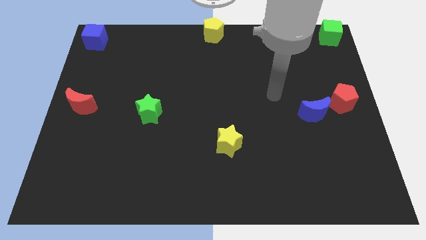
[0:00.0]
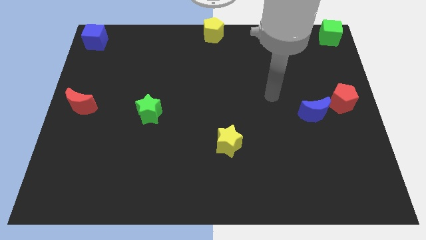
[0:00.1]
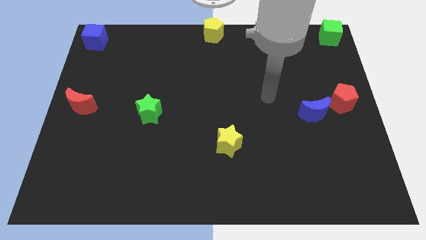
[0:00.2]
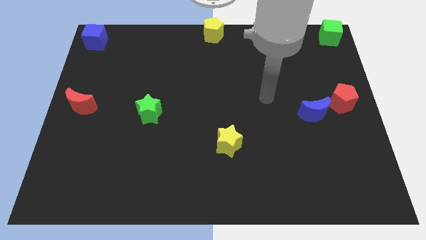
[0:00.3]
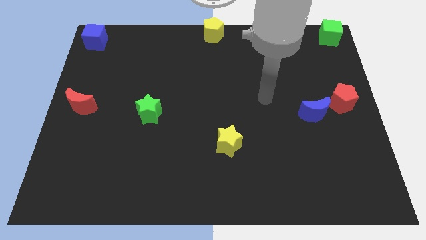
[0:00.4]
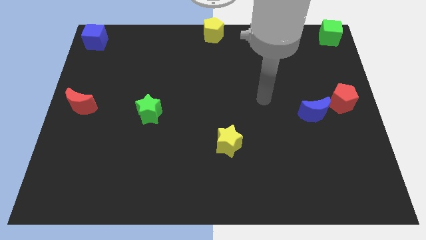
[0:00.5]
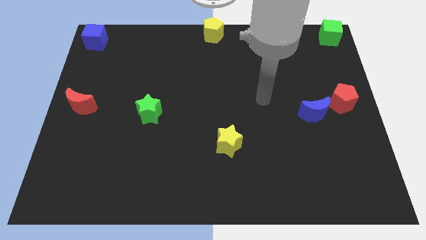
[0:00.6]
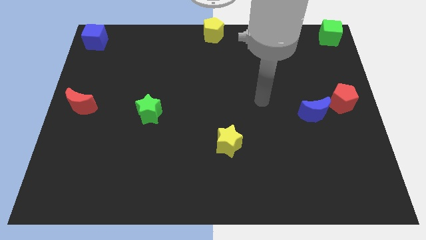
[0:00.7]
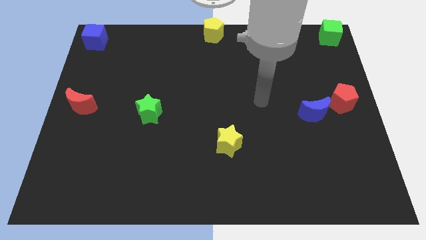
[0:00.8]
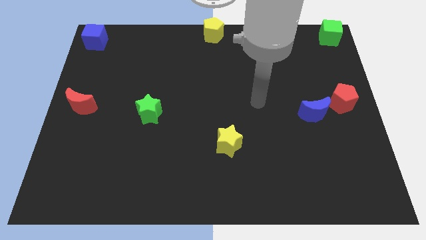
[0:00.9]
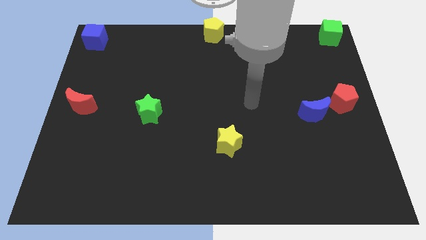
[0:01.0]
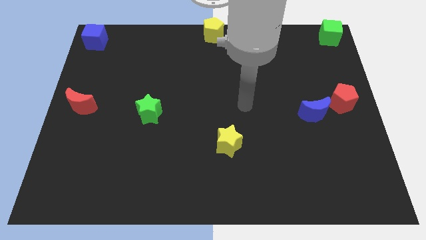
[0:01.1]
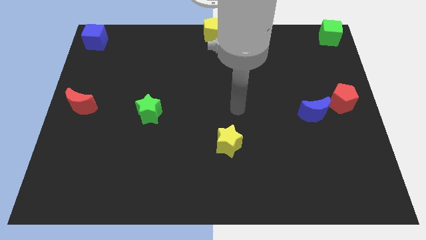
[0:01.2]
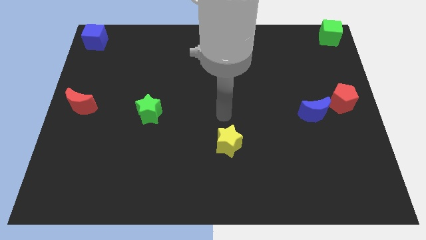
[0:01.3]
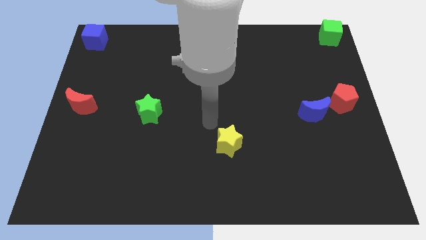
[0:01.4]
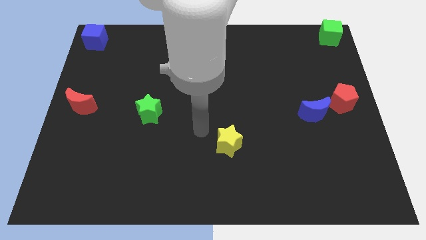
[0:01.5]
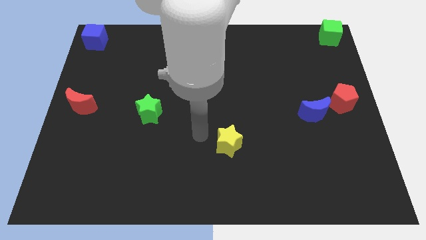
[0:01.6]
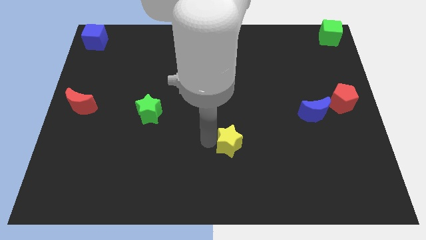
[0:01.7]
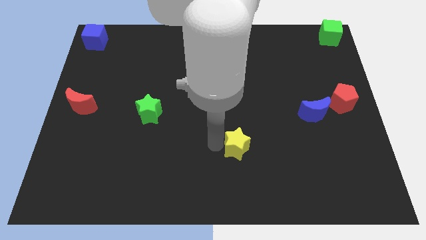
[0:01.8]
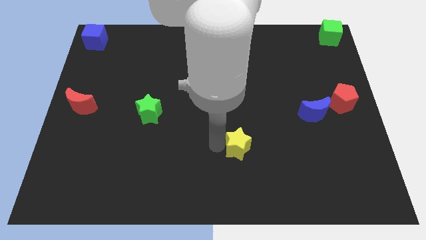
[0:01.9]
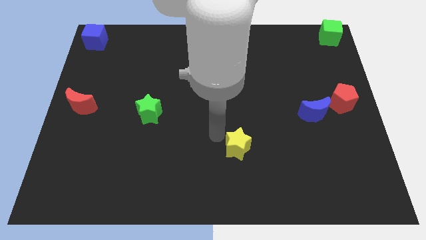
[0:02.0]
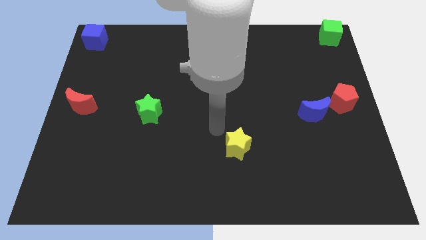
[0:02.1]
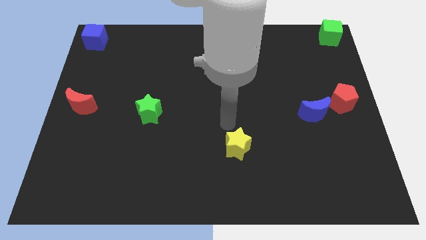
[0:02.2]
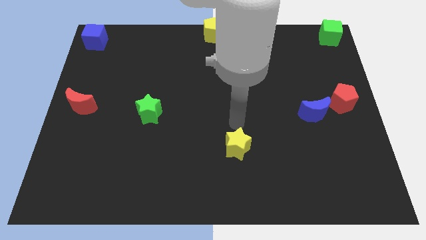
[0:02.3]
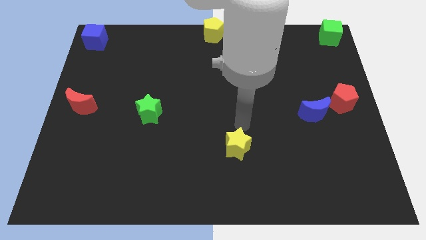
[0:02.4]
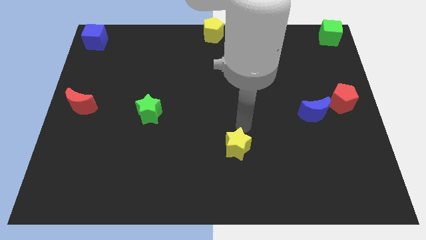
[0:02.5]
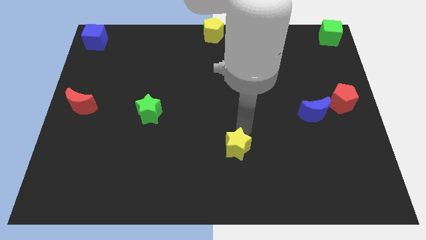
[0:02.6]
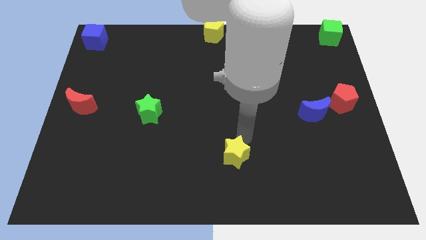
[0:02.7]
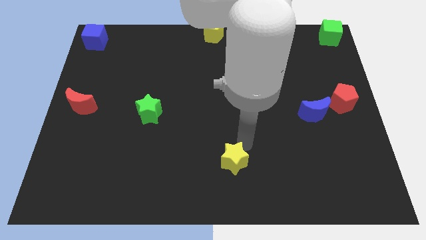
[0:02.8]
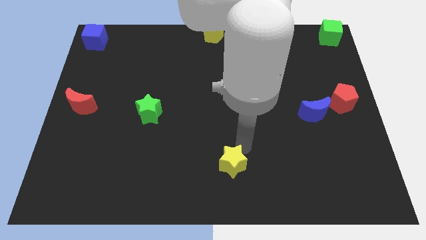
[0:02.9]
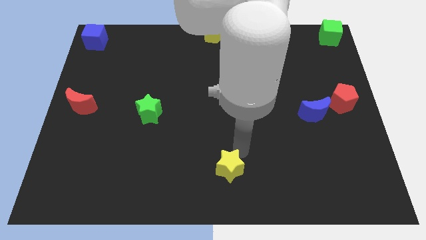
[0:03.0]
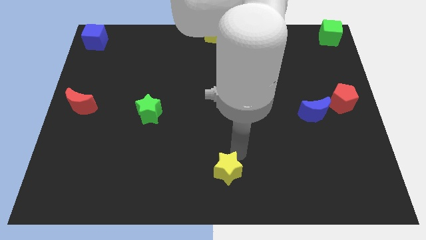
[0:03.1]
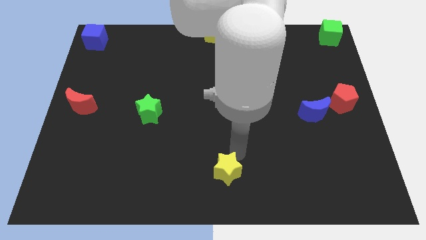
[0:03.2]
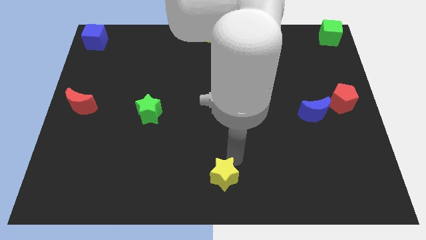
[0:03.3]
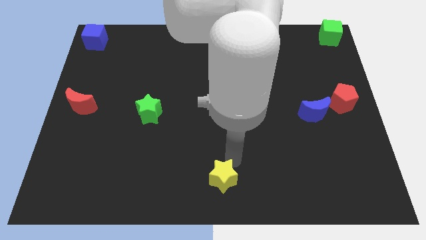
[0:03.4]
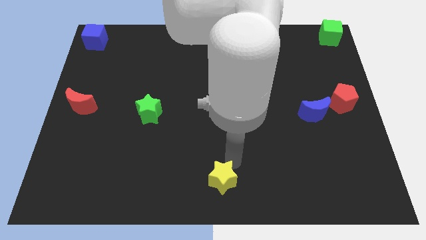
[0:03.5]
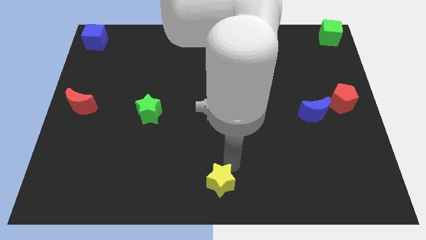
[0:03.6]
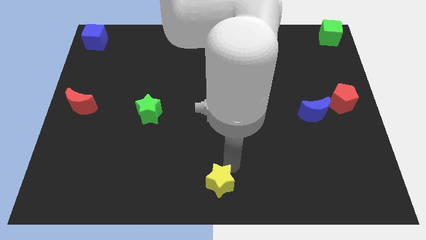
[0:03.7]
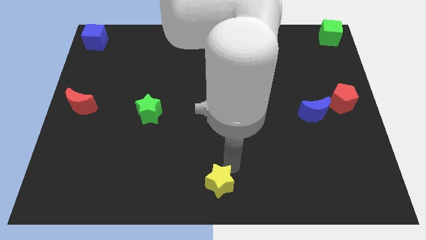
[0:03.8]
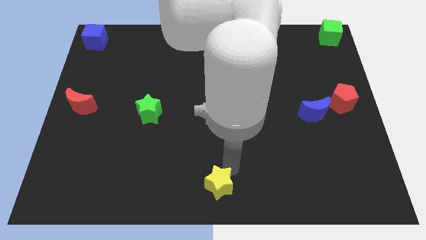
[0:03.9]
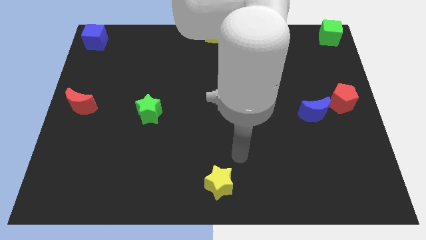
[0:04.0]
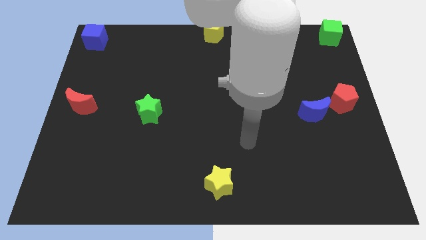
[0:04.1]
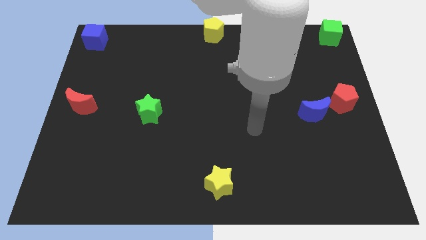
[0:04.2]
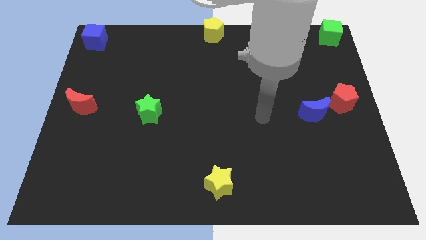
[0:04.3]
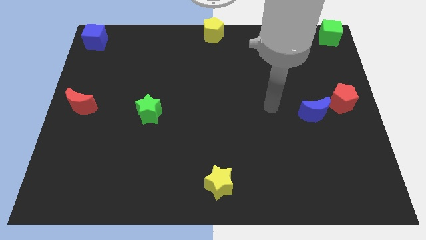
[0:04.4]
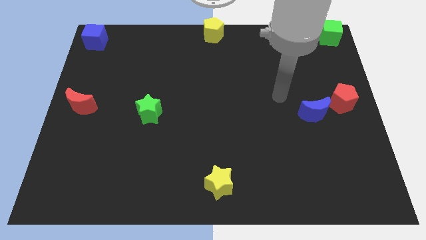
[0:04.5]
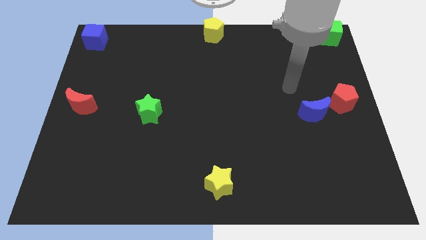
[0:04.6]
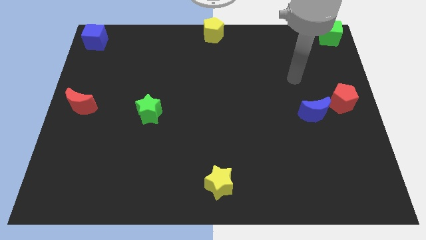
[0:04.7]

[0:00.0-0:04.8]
push the yellow star to the bottom center of the board

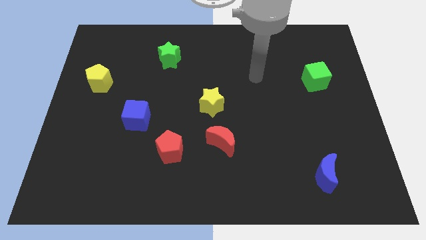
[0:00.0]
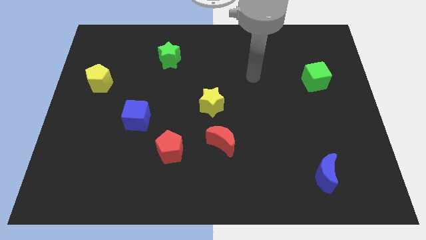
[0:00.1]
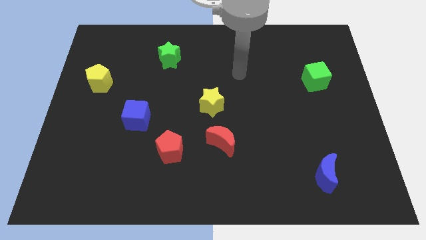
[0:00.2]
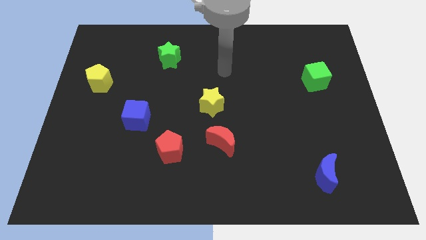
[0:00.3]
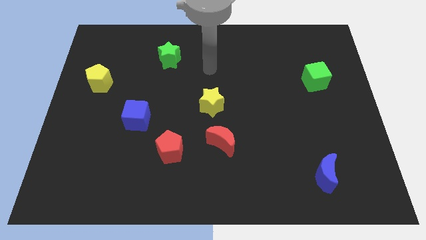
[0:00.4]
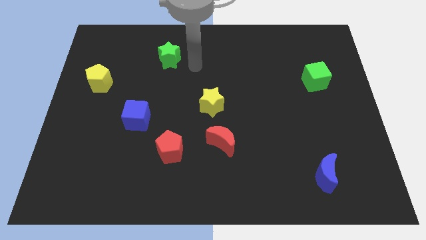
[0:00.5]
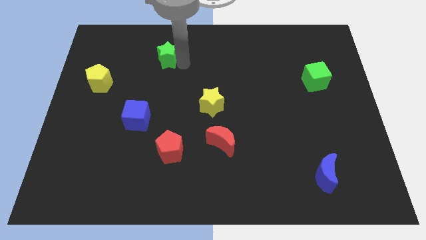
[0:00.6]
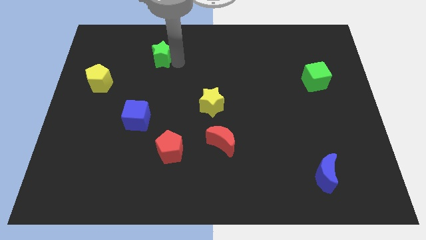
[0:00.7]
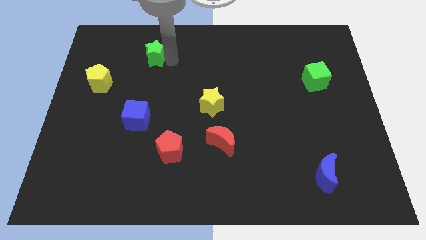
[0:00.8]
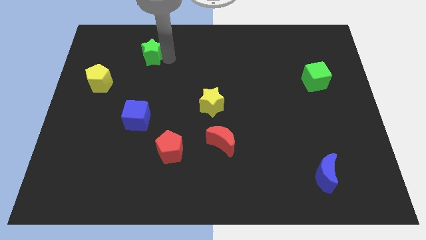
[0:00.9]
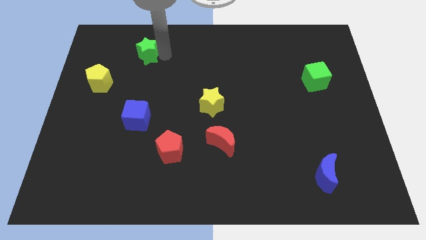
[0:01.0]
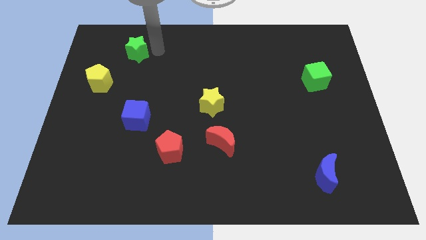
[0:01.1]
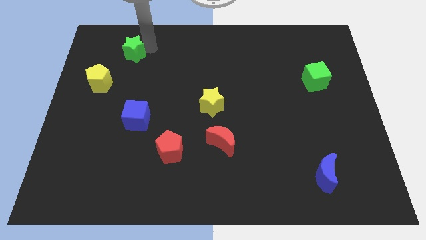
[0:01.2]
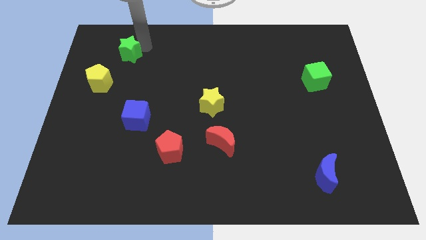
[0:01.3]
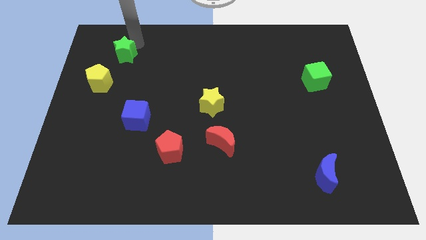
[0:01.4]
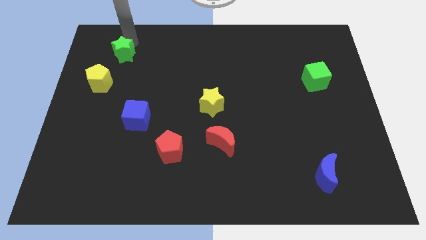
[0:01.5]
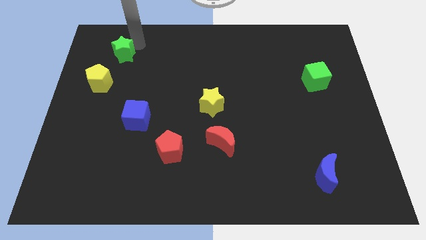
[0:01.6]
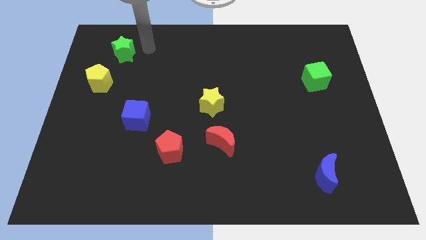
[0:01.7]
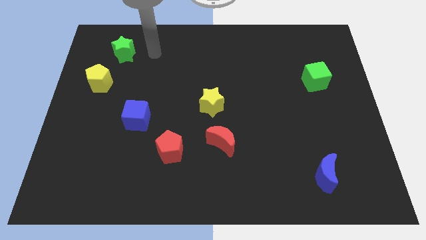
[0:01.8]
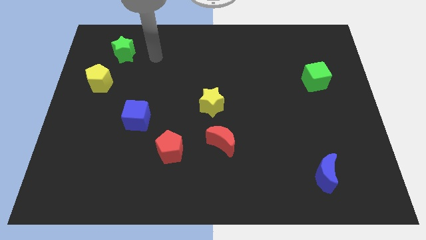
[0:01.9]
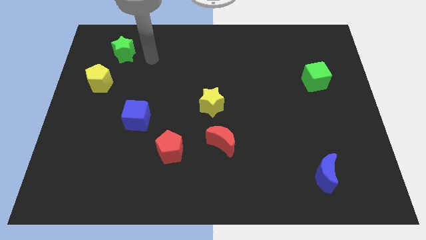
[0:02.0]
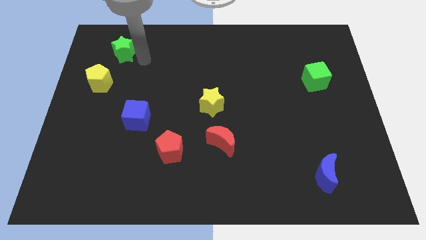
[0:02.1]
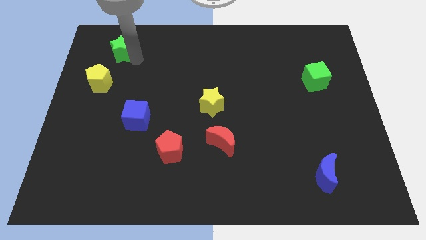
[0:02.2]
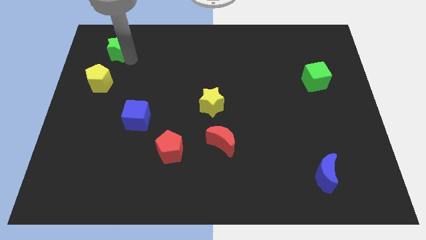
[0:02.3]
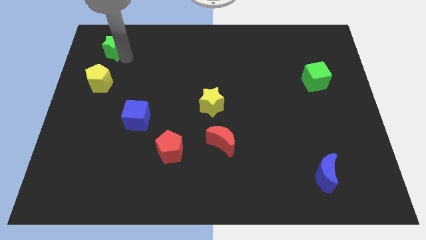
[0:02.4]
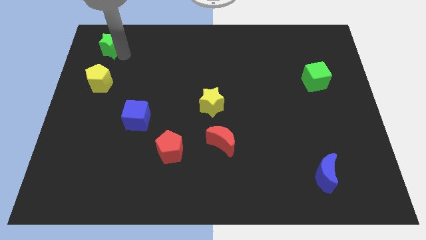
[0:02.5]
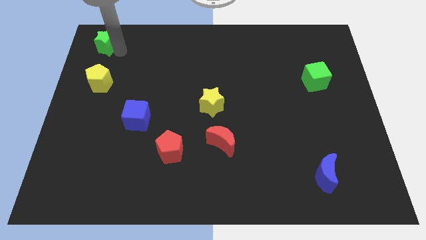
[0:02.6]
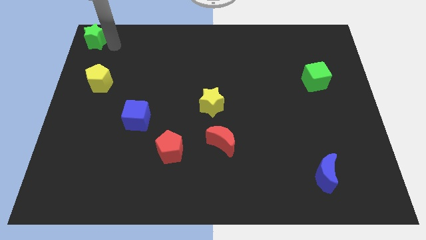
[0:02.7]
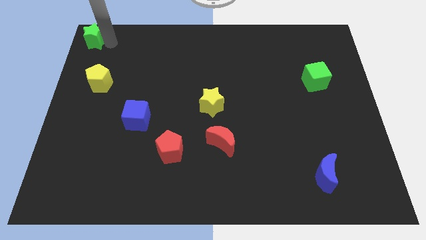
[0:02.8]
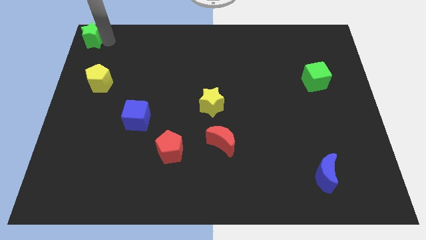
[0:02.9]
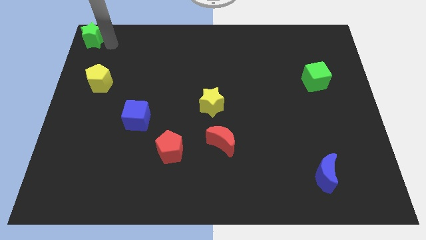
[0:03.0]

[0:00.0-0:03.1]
slide green star towards top left

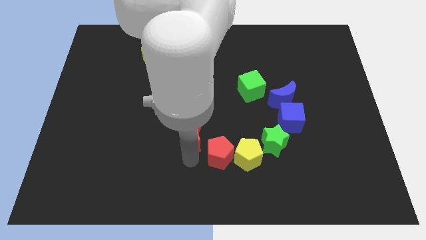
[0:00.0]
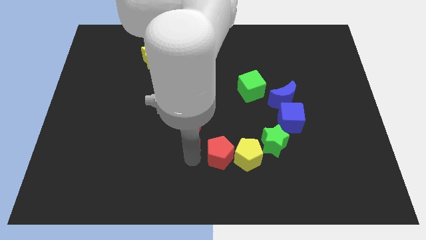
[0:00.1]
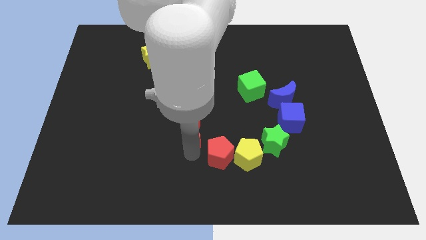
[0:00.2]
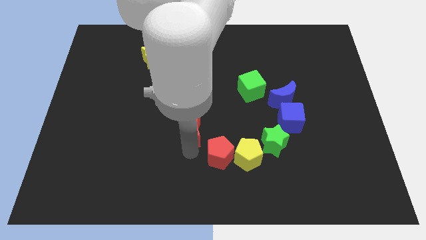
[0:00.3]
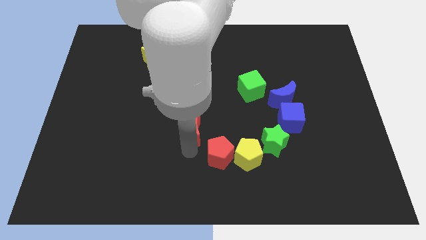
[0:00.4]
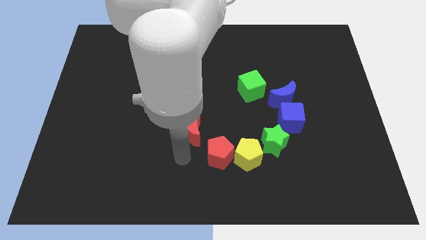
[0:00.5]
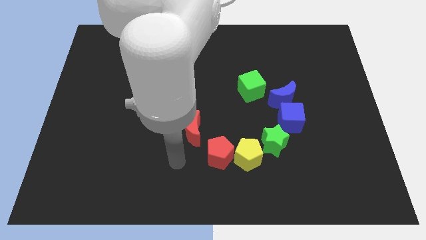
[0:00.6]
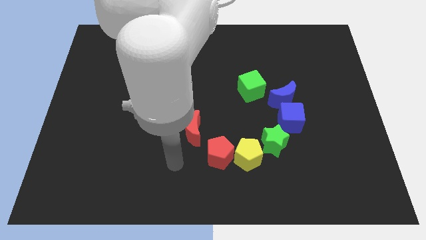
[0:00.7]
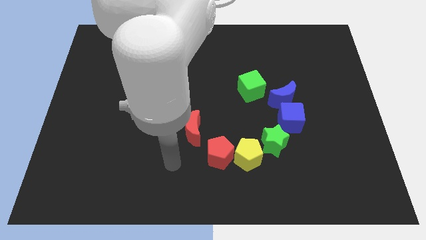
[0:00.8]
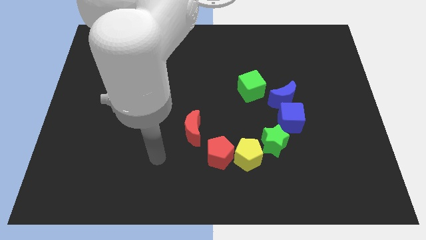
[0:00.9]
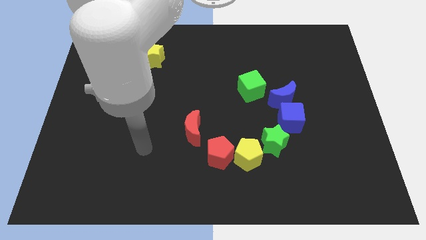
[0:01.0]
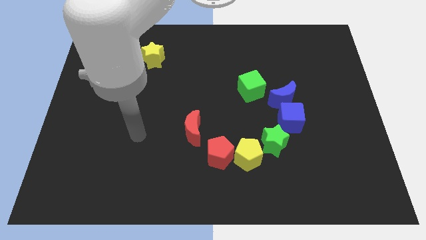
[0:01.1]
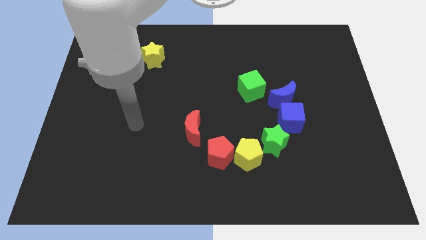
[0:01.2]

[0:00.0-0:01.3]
move the arm away from the red crescent
